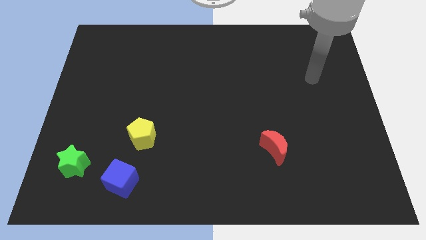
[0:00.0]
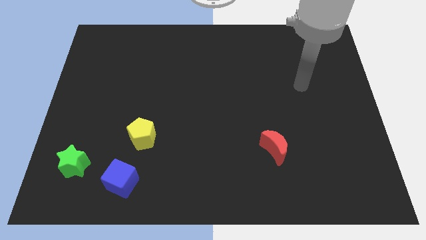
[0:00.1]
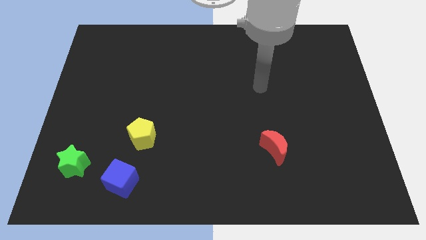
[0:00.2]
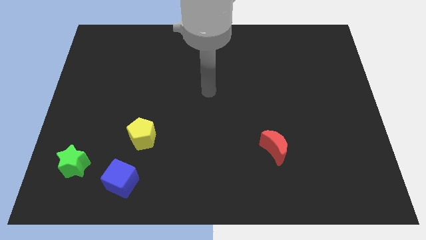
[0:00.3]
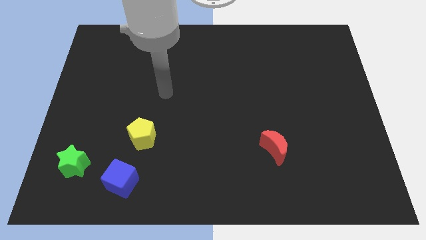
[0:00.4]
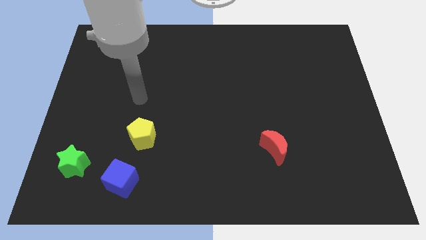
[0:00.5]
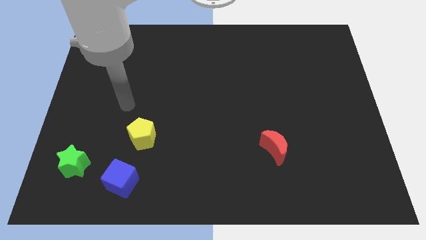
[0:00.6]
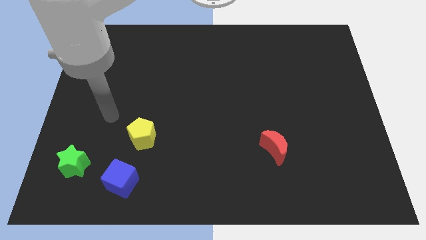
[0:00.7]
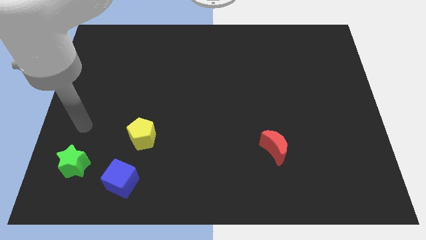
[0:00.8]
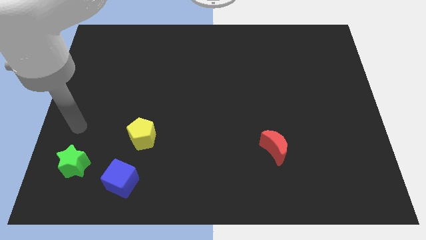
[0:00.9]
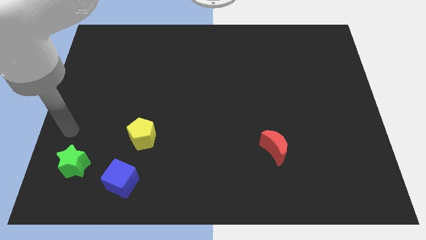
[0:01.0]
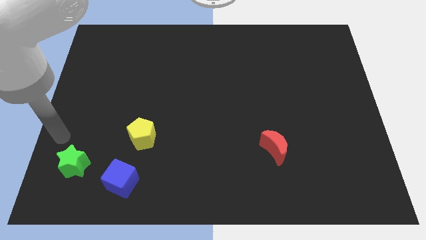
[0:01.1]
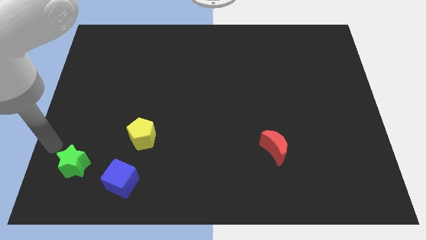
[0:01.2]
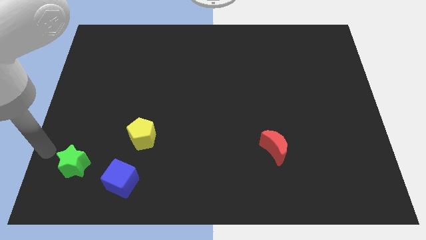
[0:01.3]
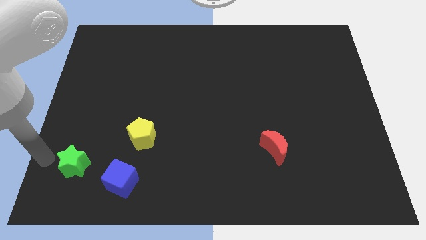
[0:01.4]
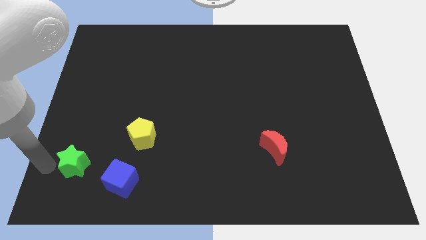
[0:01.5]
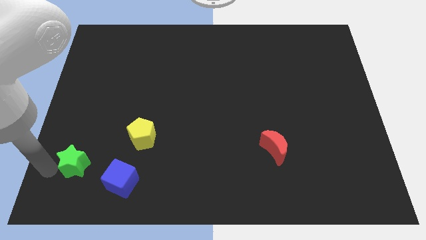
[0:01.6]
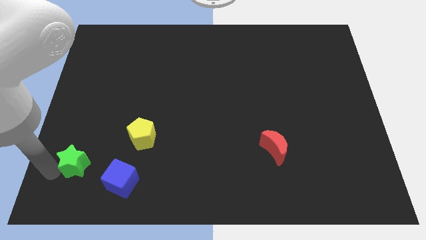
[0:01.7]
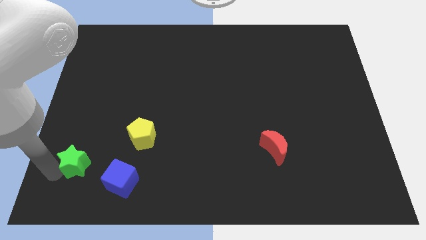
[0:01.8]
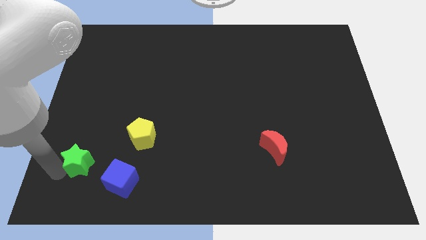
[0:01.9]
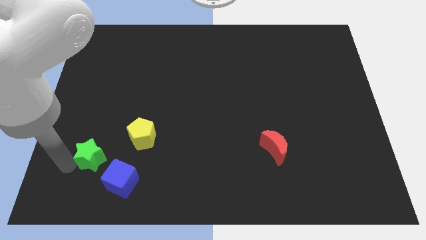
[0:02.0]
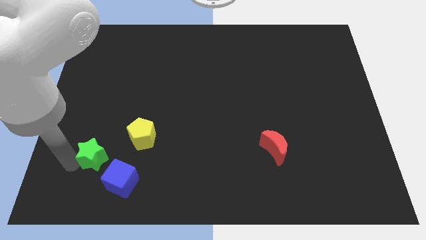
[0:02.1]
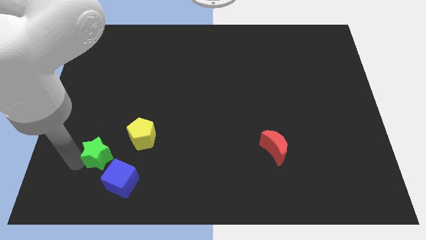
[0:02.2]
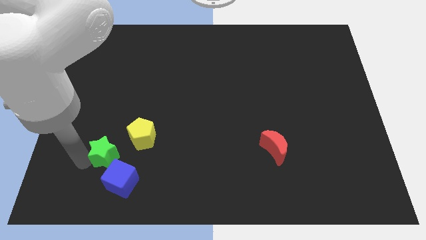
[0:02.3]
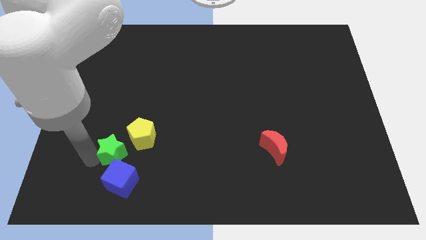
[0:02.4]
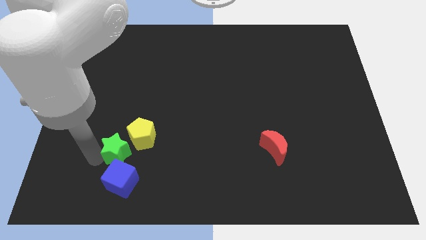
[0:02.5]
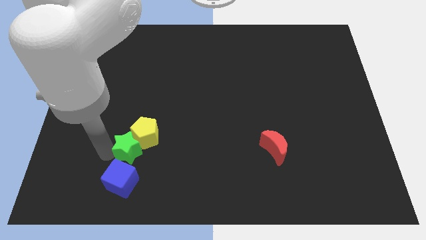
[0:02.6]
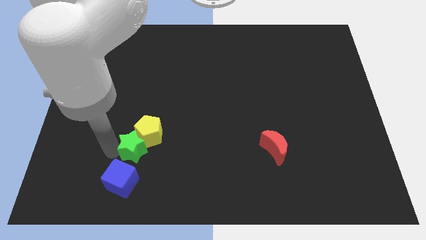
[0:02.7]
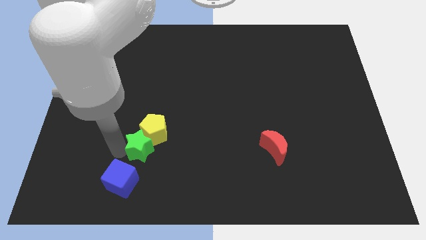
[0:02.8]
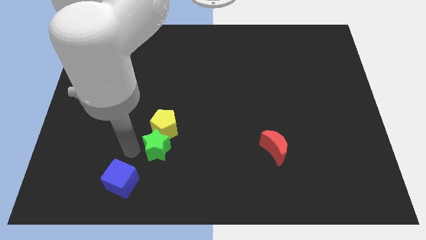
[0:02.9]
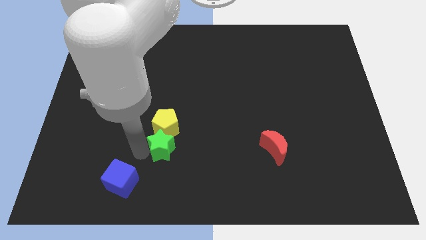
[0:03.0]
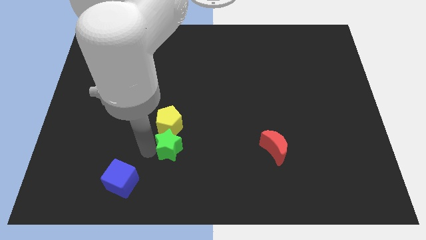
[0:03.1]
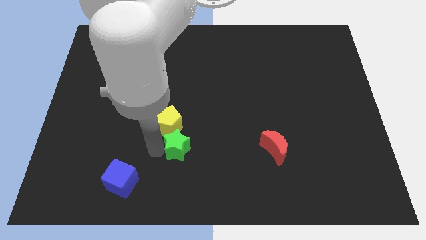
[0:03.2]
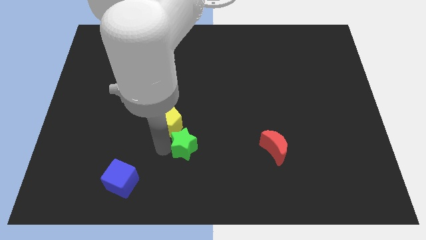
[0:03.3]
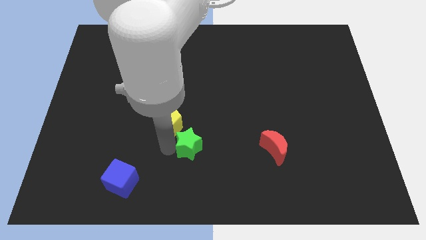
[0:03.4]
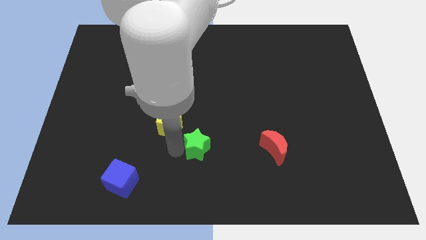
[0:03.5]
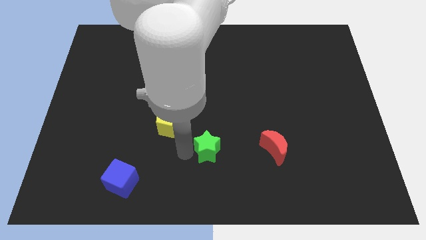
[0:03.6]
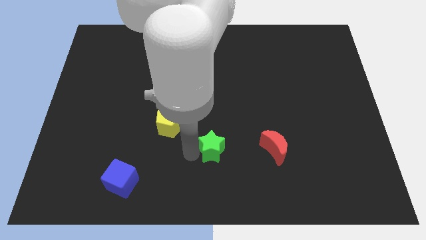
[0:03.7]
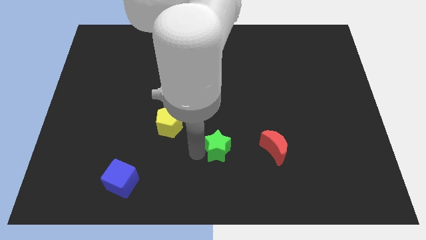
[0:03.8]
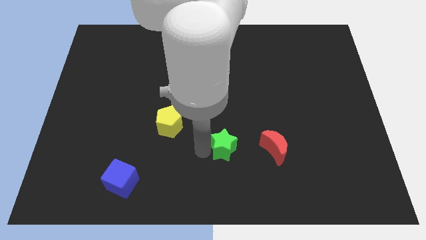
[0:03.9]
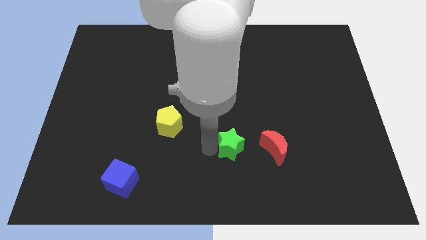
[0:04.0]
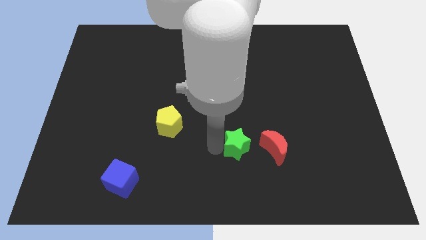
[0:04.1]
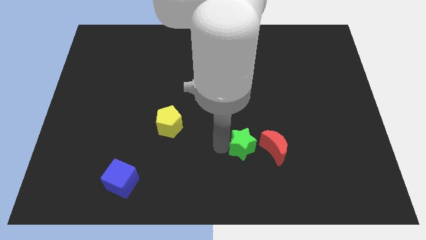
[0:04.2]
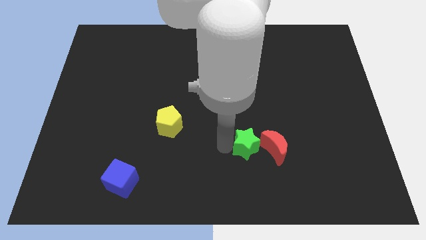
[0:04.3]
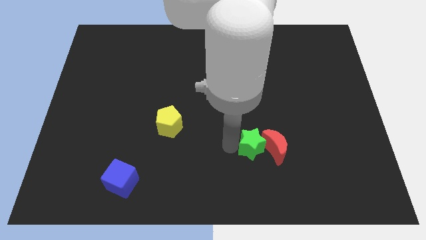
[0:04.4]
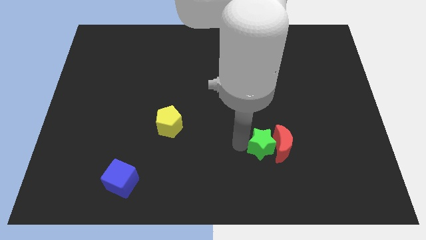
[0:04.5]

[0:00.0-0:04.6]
put the green block close to the red moon

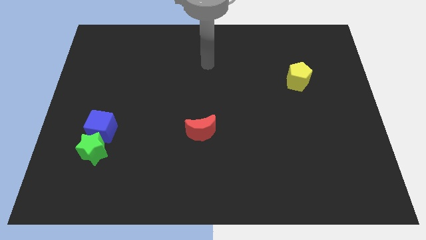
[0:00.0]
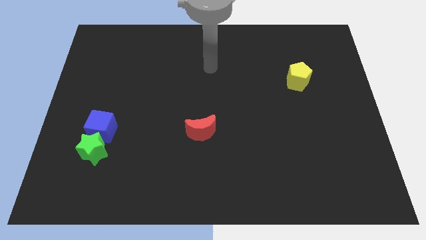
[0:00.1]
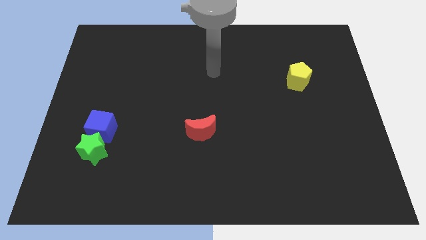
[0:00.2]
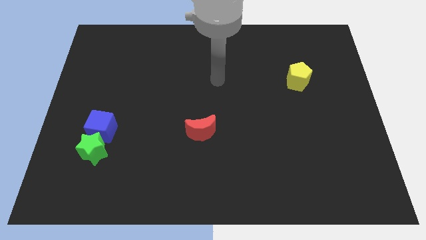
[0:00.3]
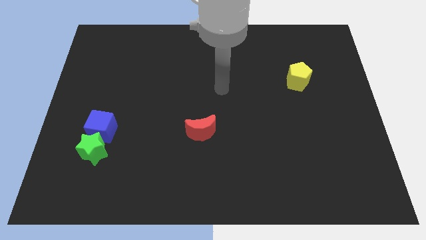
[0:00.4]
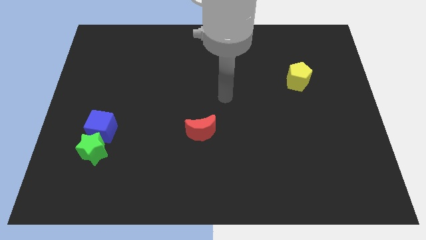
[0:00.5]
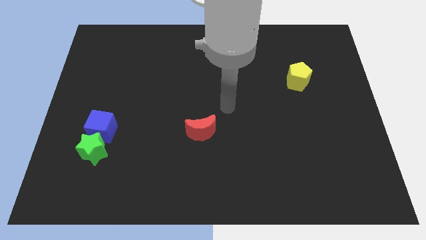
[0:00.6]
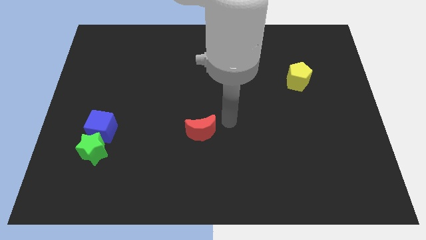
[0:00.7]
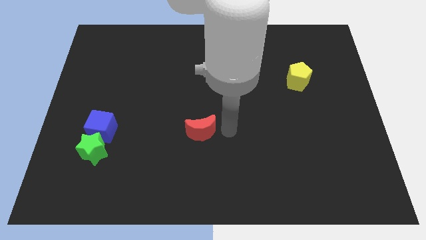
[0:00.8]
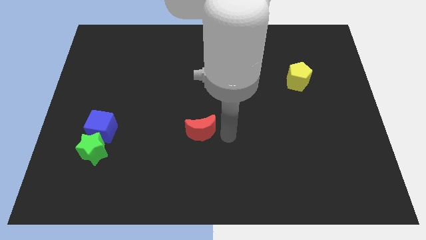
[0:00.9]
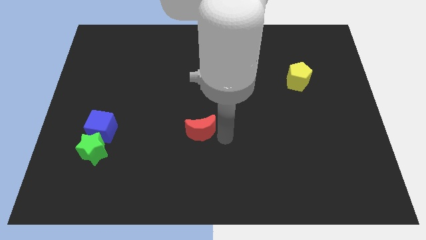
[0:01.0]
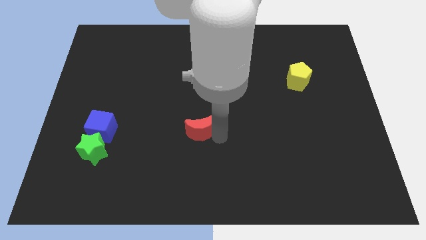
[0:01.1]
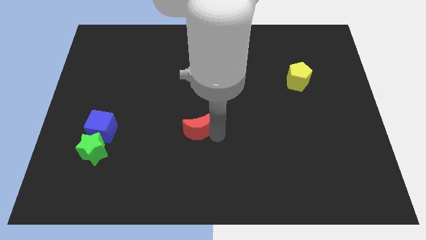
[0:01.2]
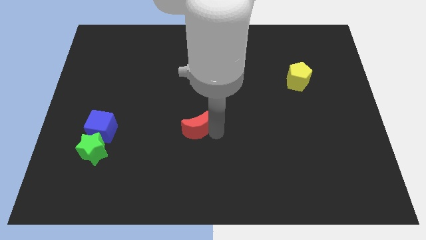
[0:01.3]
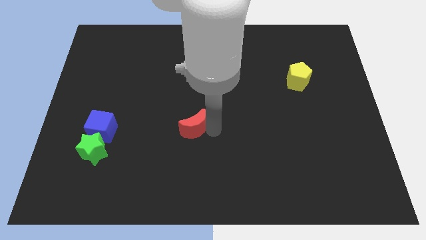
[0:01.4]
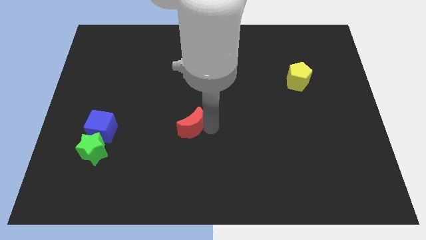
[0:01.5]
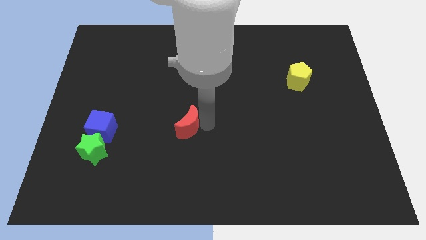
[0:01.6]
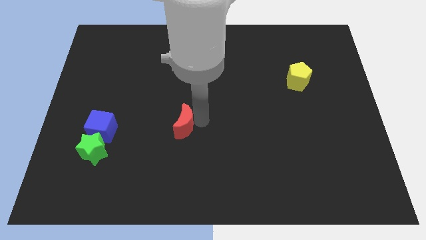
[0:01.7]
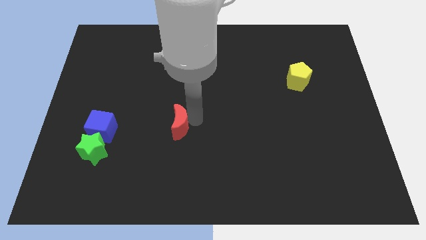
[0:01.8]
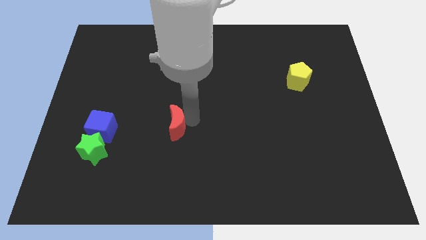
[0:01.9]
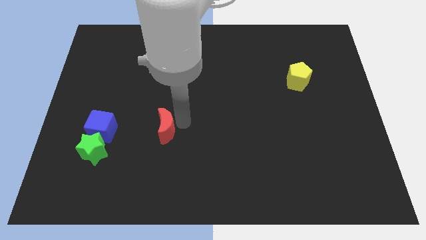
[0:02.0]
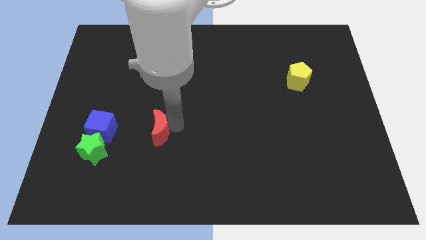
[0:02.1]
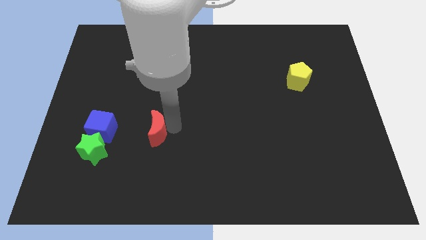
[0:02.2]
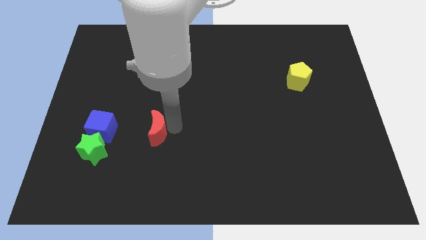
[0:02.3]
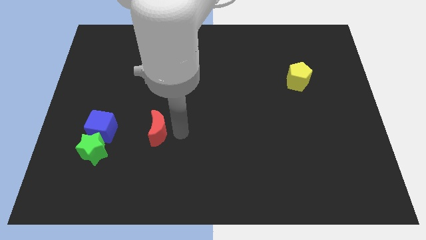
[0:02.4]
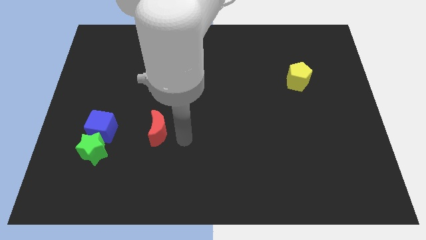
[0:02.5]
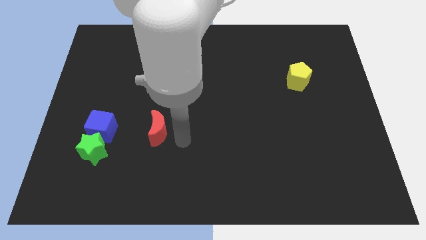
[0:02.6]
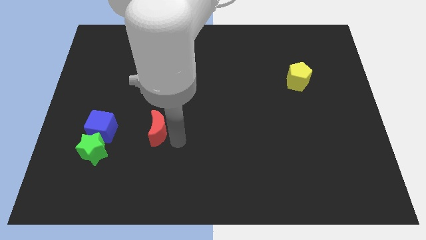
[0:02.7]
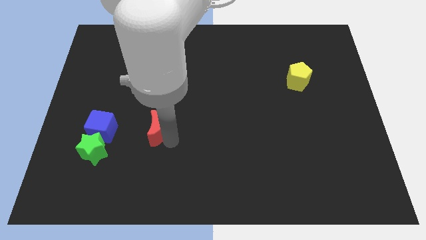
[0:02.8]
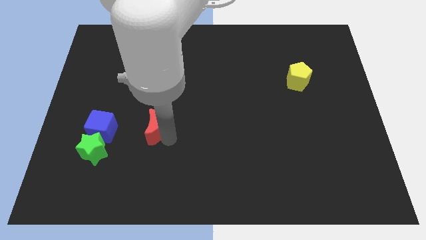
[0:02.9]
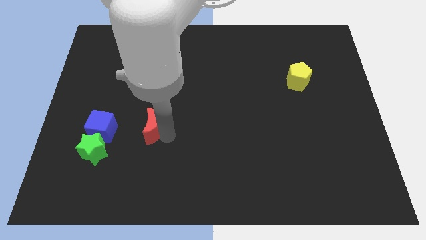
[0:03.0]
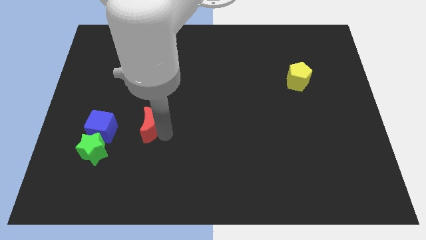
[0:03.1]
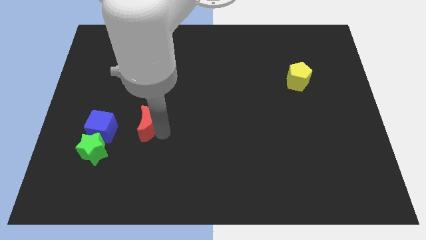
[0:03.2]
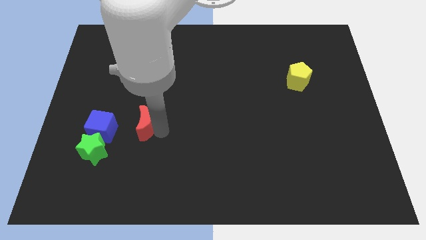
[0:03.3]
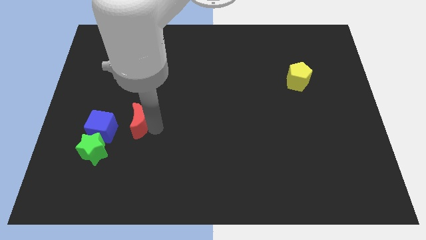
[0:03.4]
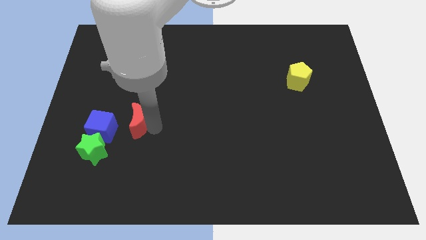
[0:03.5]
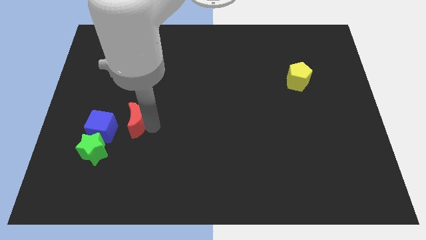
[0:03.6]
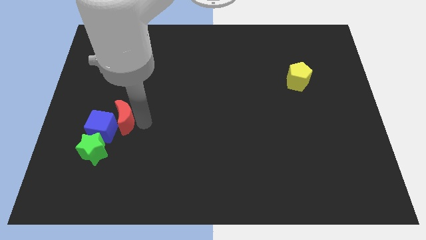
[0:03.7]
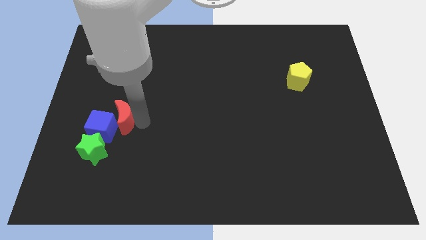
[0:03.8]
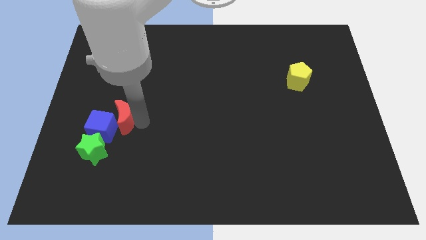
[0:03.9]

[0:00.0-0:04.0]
push the red block to the blue block

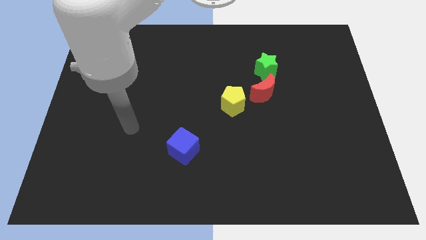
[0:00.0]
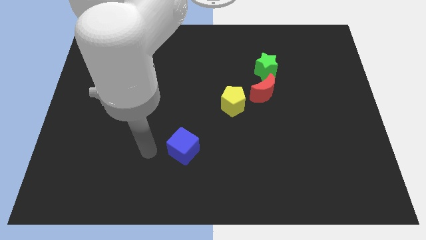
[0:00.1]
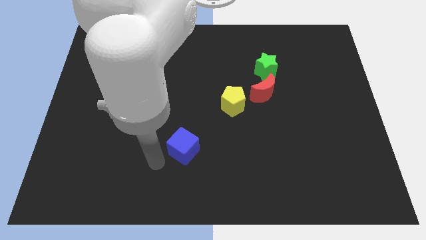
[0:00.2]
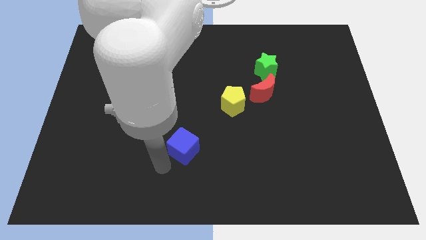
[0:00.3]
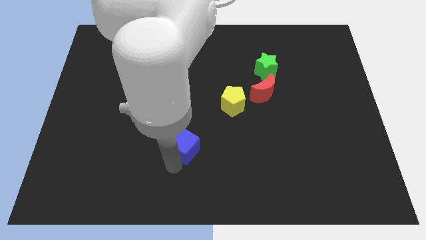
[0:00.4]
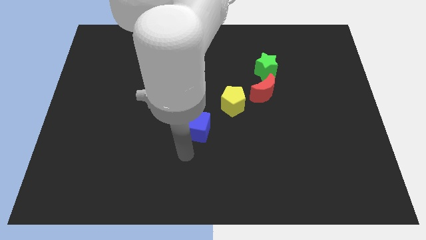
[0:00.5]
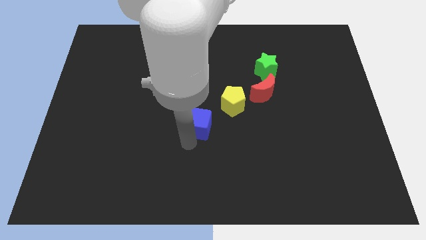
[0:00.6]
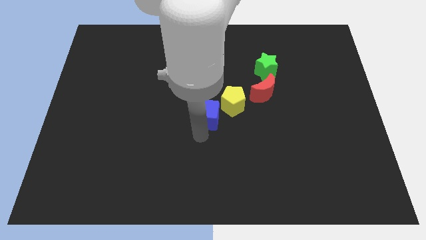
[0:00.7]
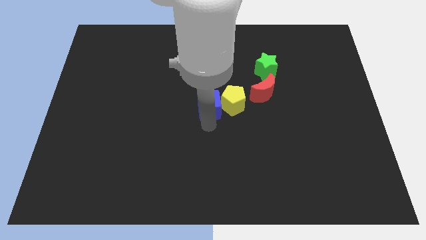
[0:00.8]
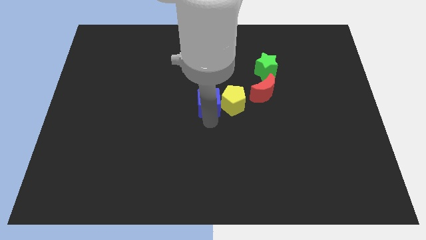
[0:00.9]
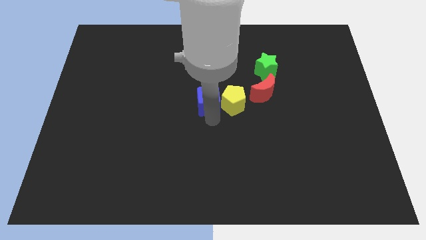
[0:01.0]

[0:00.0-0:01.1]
put the blue cube to the yellow pentagon
